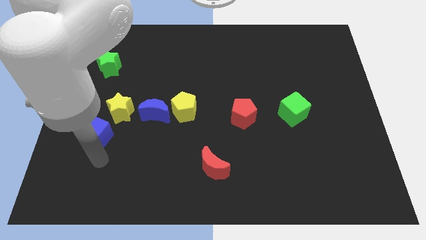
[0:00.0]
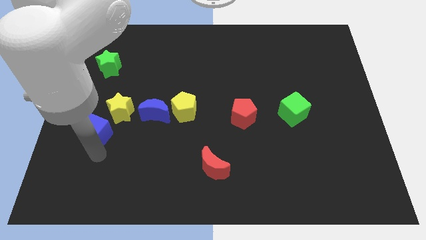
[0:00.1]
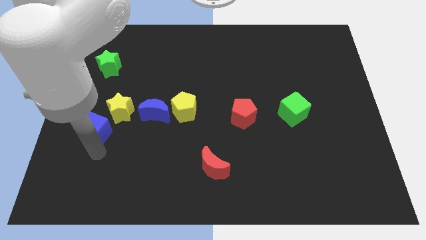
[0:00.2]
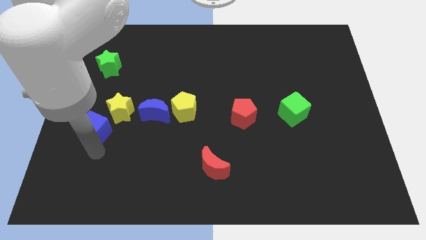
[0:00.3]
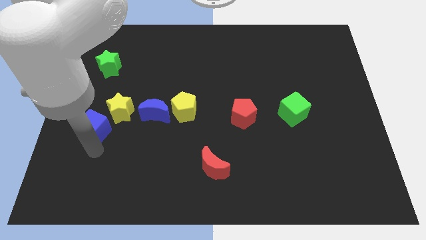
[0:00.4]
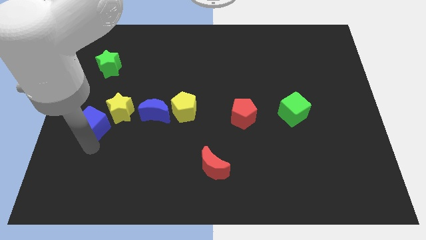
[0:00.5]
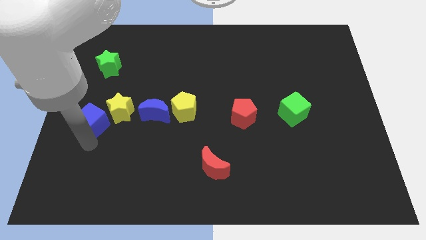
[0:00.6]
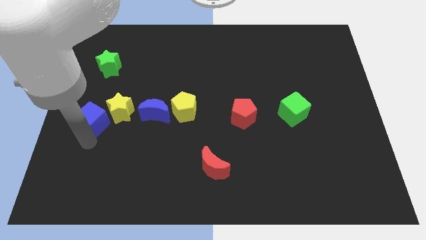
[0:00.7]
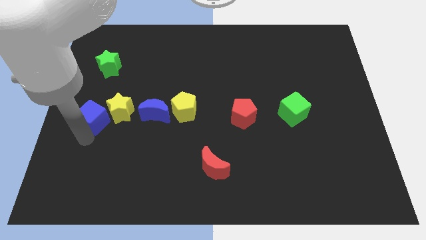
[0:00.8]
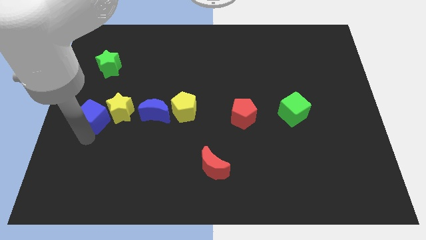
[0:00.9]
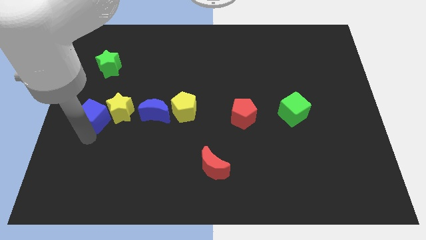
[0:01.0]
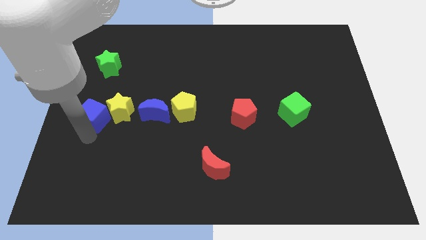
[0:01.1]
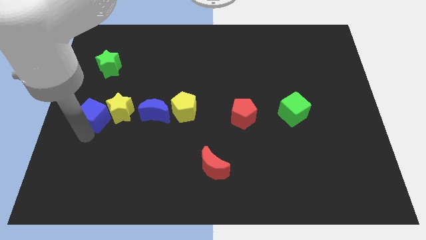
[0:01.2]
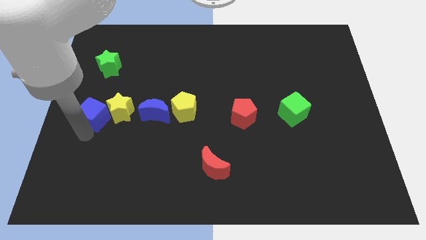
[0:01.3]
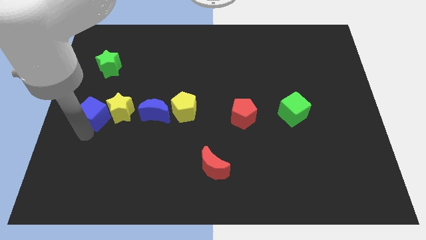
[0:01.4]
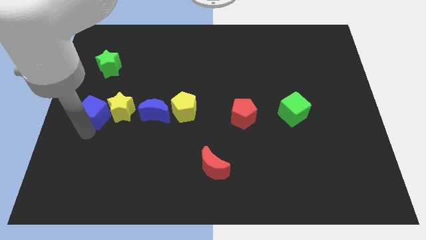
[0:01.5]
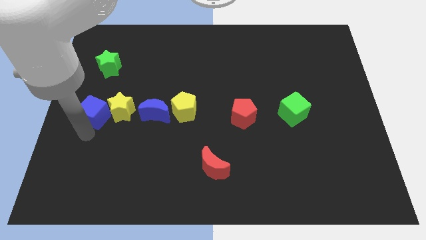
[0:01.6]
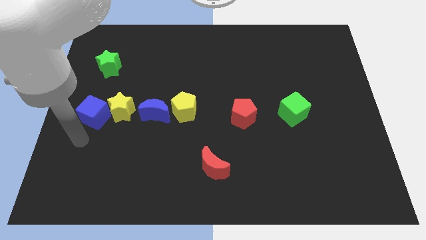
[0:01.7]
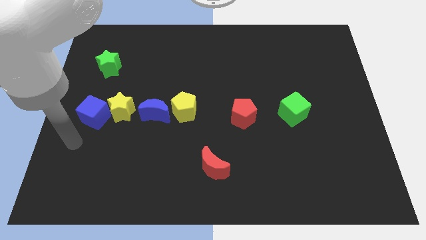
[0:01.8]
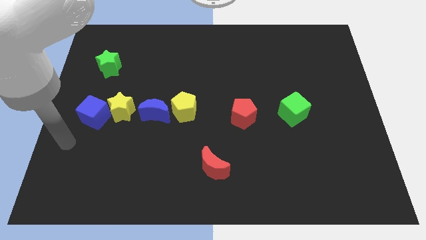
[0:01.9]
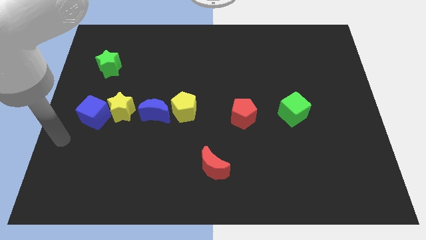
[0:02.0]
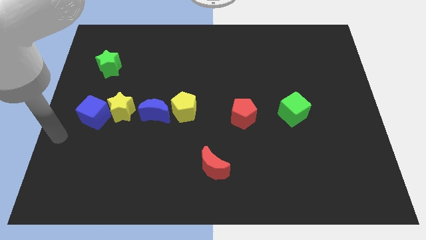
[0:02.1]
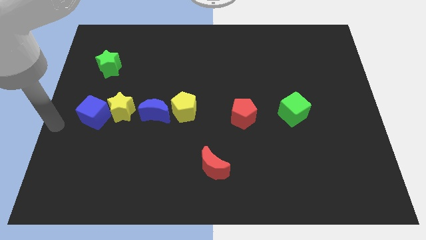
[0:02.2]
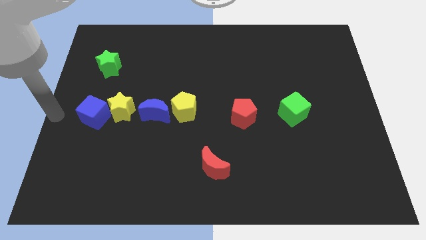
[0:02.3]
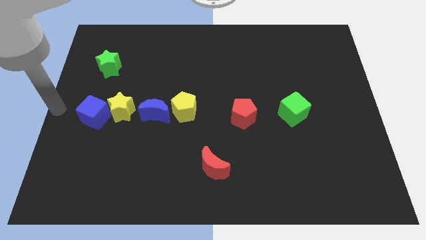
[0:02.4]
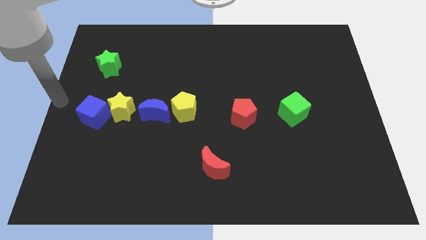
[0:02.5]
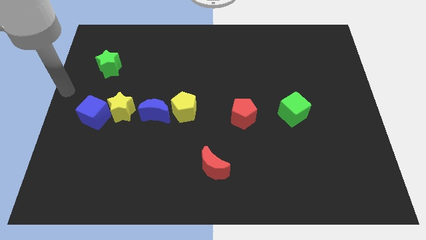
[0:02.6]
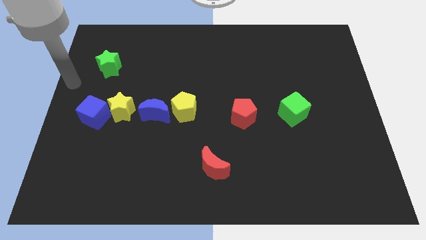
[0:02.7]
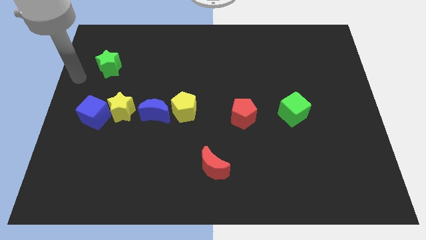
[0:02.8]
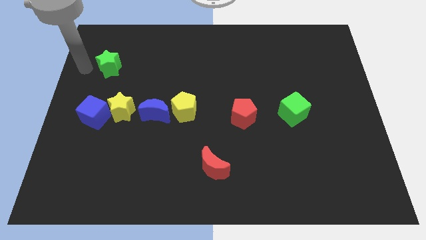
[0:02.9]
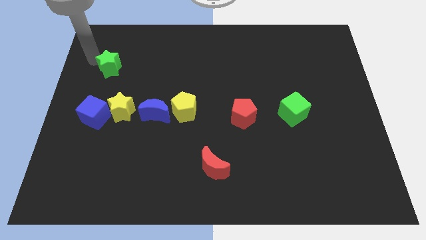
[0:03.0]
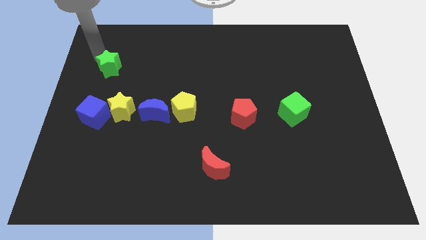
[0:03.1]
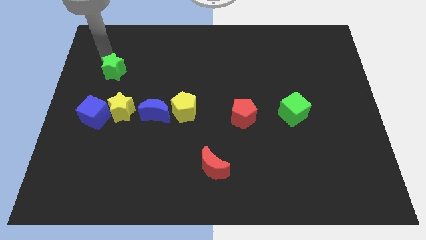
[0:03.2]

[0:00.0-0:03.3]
move your arm to the top of the green star

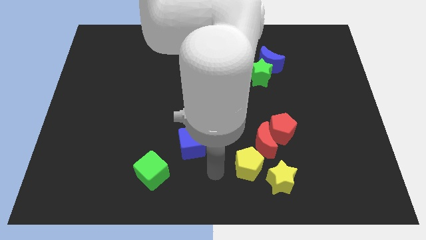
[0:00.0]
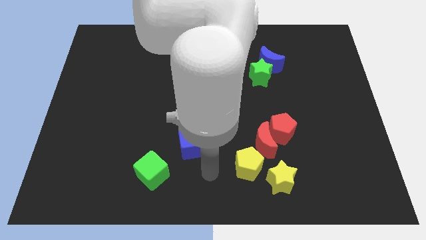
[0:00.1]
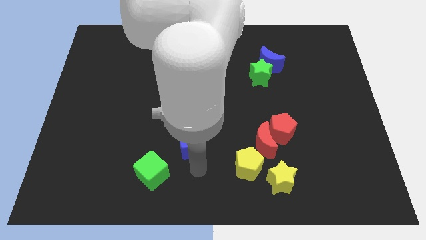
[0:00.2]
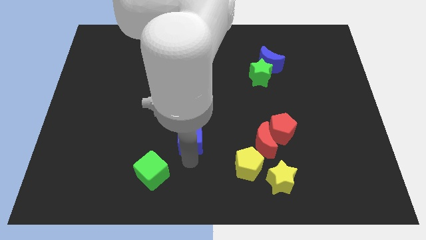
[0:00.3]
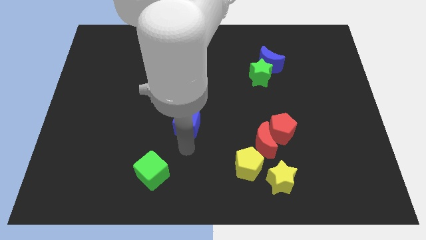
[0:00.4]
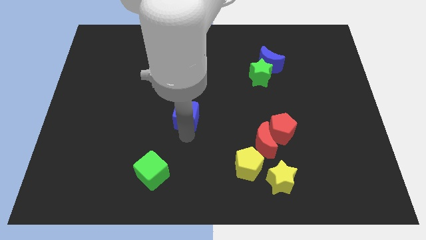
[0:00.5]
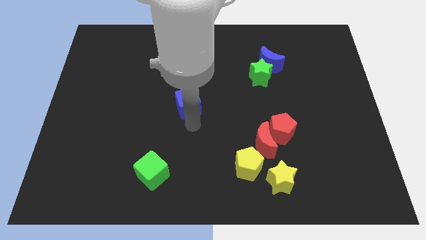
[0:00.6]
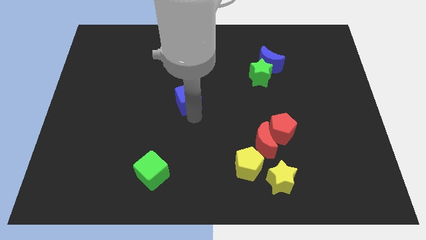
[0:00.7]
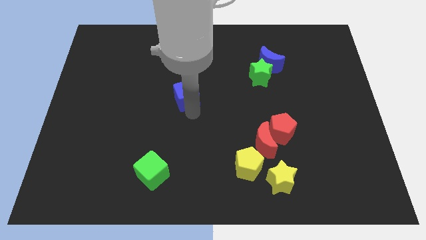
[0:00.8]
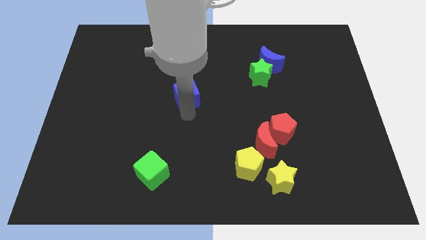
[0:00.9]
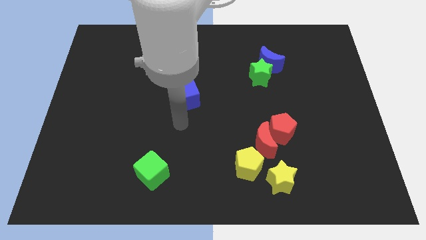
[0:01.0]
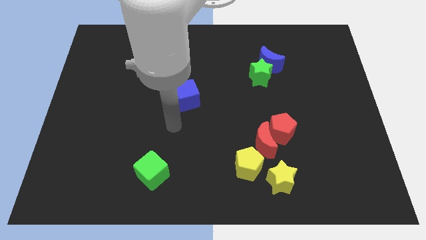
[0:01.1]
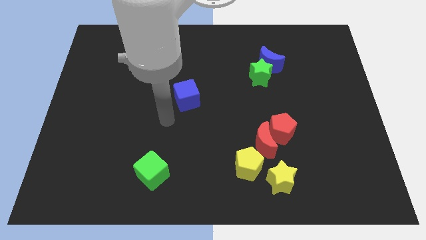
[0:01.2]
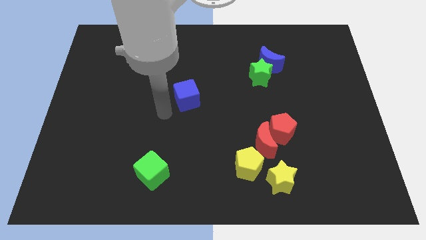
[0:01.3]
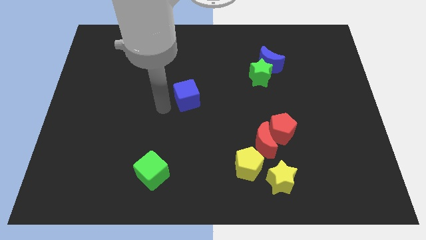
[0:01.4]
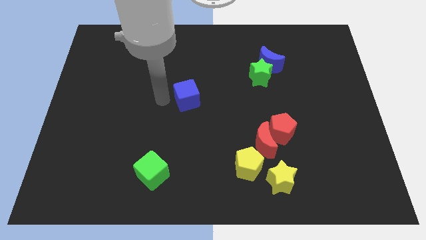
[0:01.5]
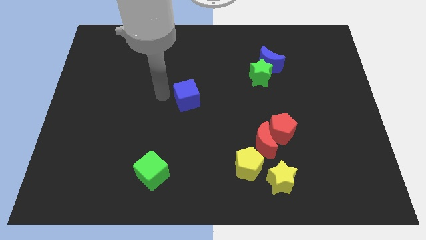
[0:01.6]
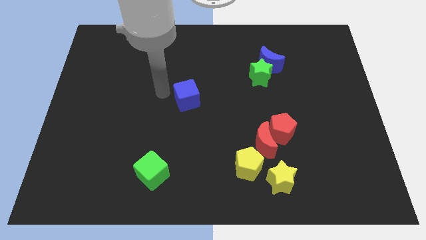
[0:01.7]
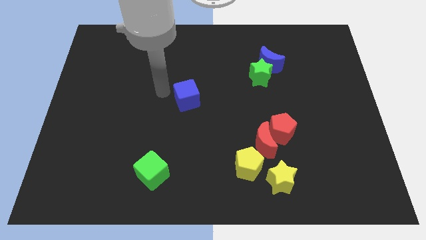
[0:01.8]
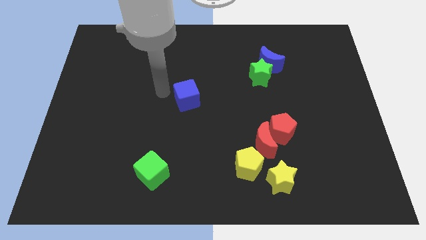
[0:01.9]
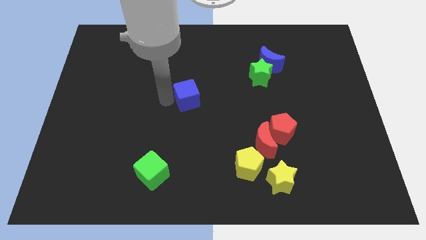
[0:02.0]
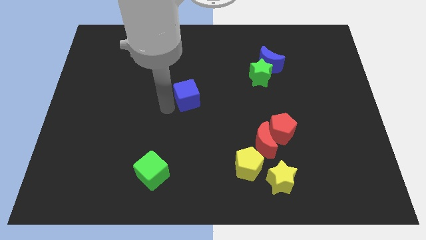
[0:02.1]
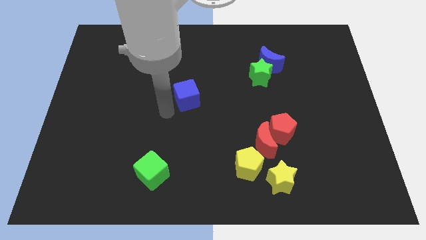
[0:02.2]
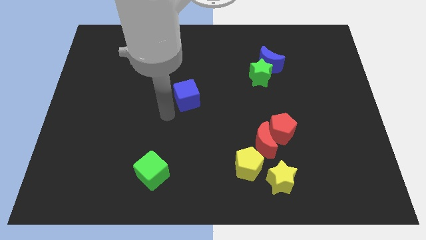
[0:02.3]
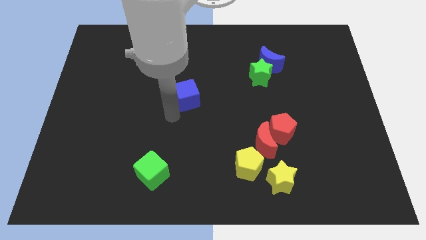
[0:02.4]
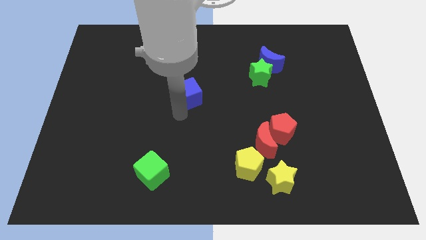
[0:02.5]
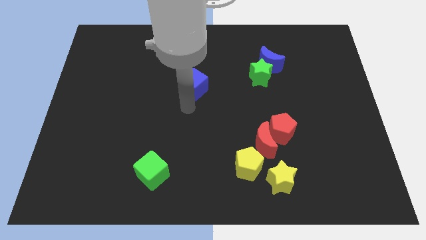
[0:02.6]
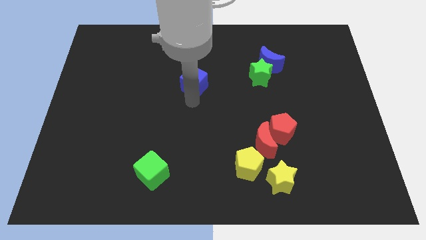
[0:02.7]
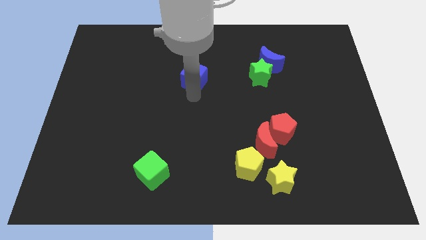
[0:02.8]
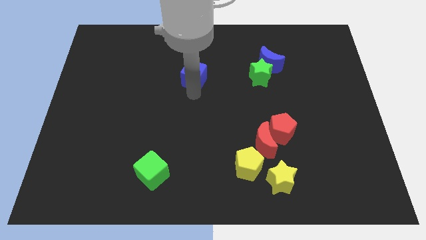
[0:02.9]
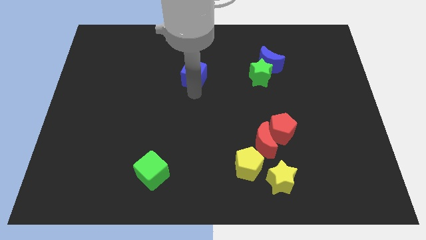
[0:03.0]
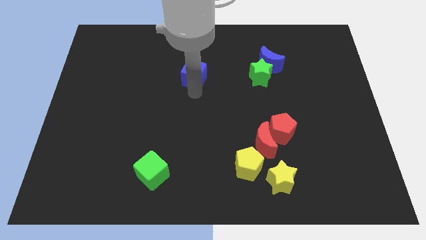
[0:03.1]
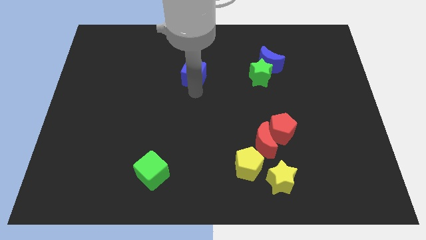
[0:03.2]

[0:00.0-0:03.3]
place blue cube to the left of green star

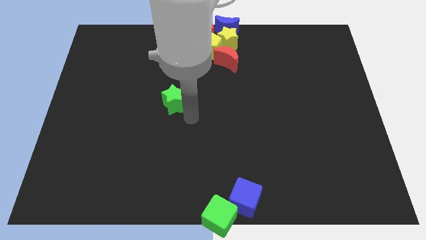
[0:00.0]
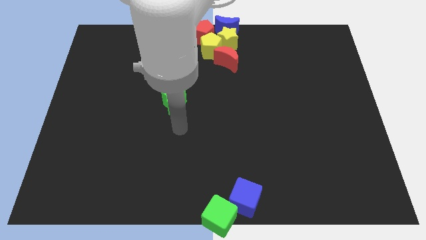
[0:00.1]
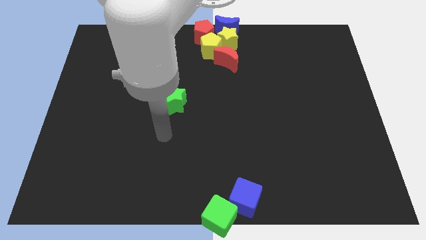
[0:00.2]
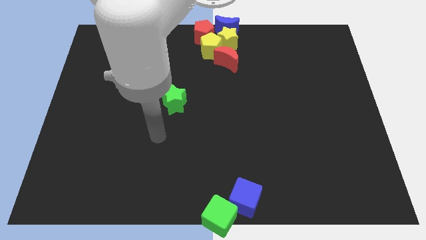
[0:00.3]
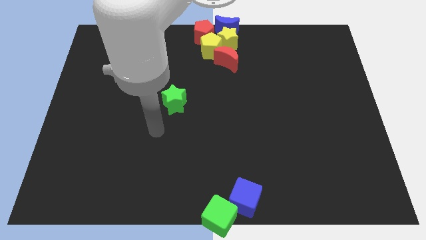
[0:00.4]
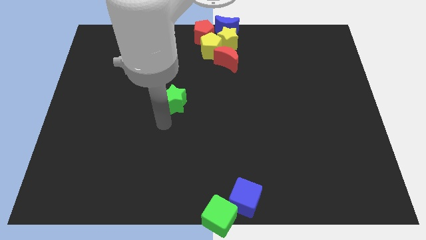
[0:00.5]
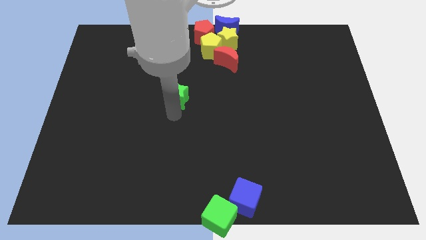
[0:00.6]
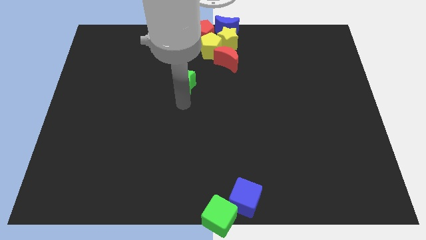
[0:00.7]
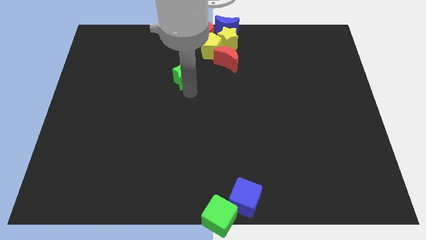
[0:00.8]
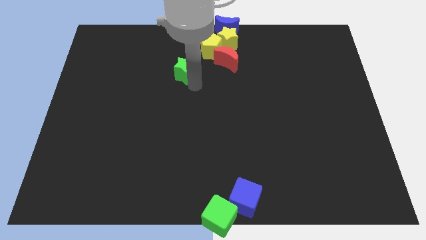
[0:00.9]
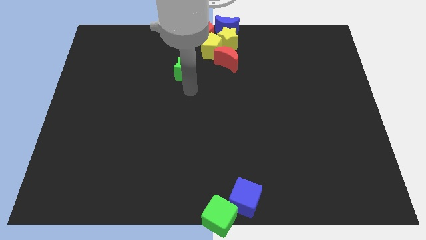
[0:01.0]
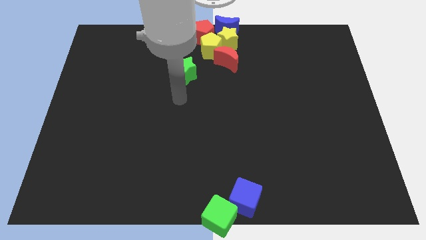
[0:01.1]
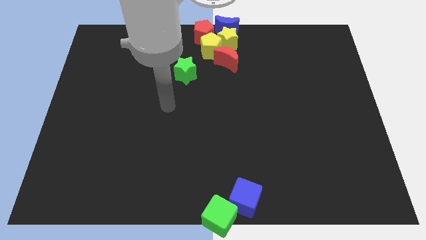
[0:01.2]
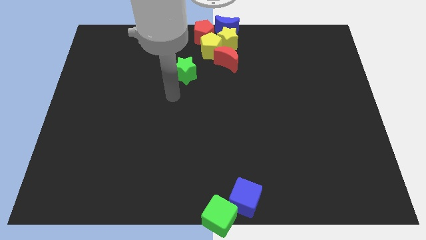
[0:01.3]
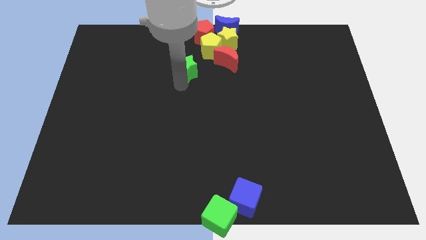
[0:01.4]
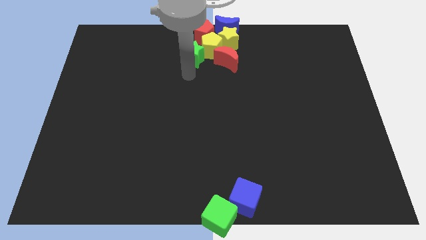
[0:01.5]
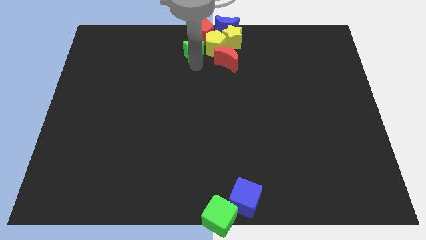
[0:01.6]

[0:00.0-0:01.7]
push the green star into the group of object

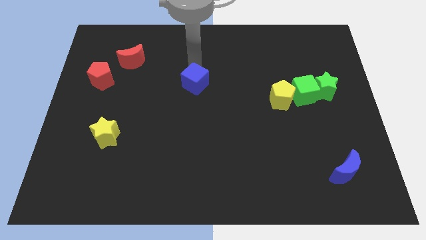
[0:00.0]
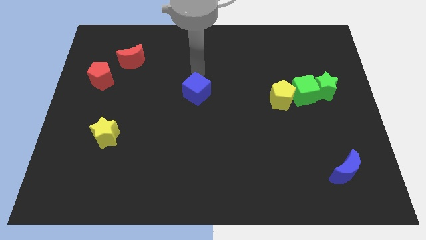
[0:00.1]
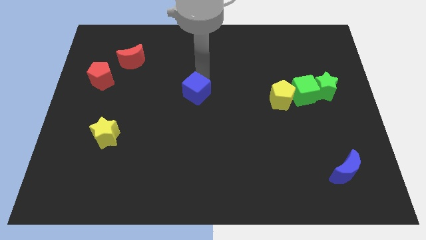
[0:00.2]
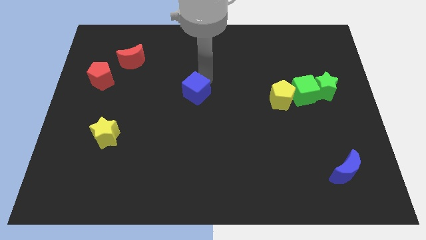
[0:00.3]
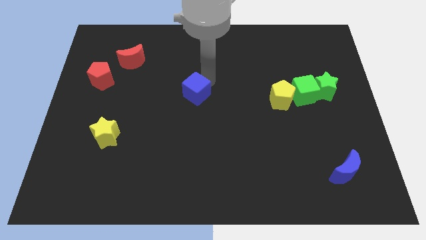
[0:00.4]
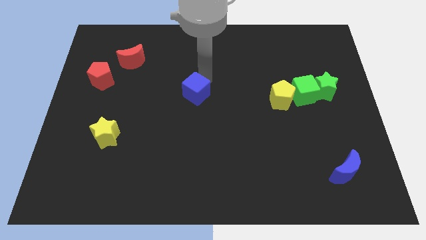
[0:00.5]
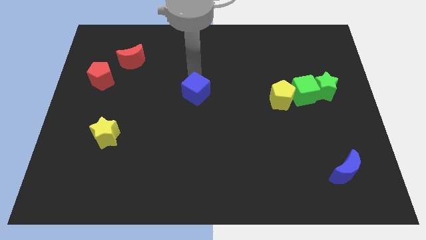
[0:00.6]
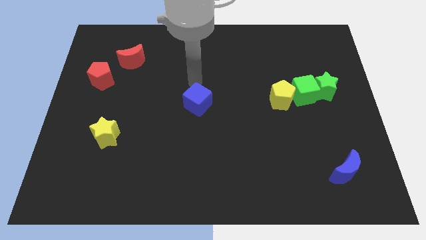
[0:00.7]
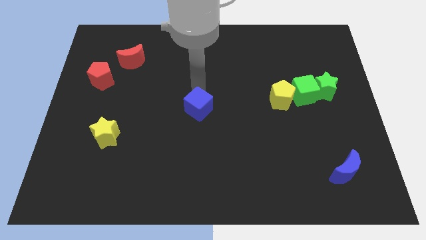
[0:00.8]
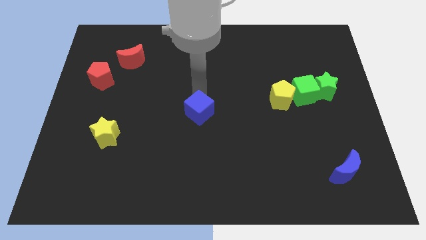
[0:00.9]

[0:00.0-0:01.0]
place the blue cube left to the yellow pentagon
